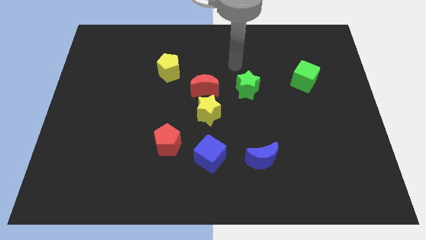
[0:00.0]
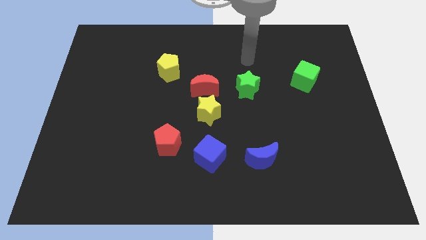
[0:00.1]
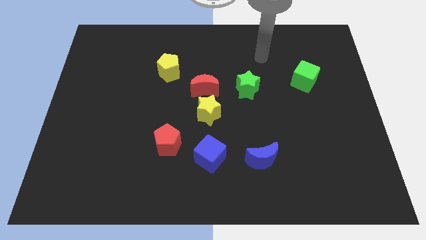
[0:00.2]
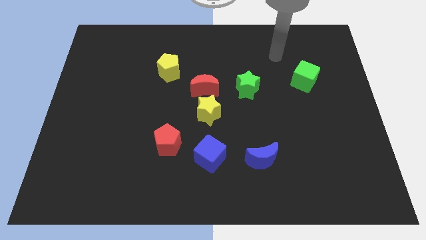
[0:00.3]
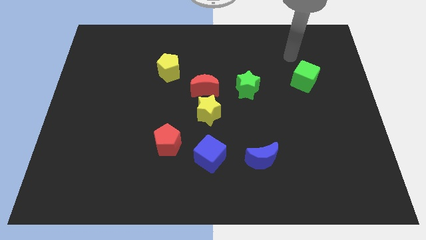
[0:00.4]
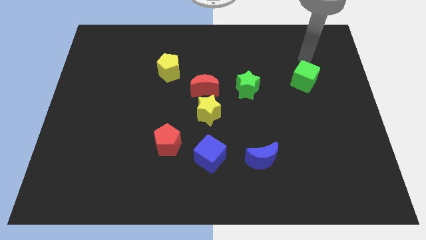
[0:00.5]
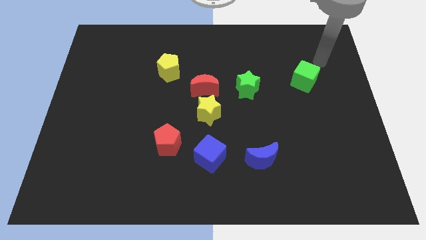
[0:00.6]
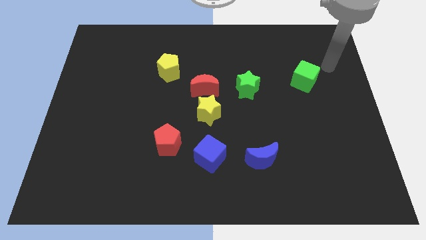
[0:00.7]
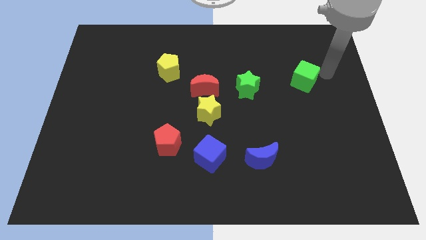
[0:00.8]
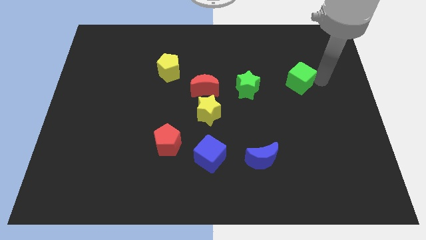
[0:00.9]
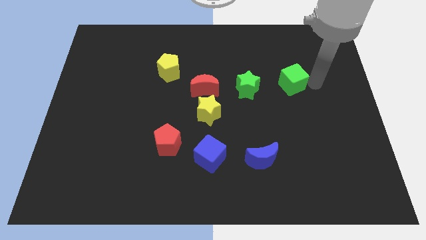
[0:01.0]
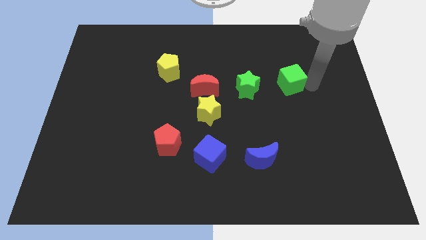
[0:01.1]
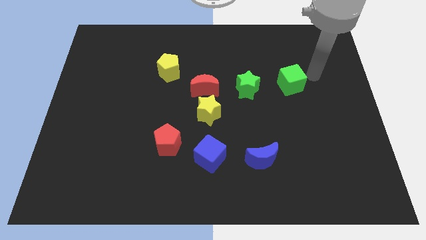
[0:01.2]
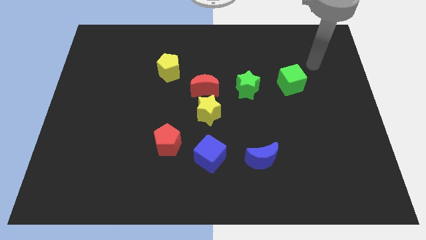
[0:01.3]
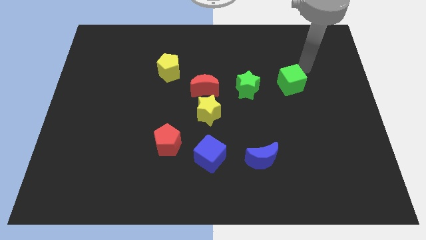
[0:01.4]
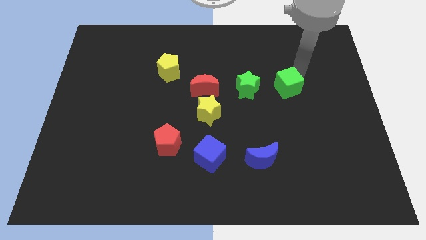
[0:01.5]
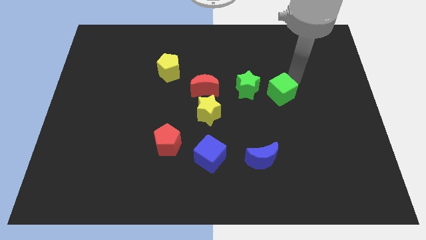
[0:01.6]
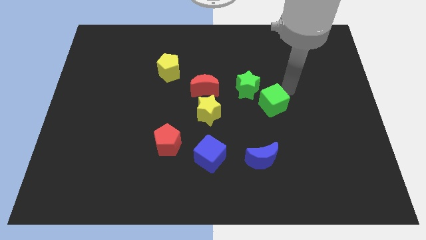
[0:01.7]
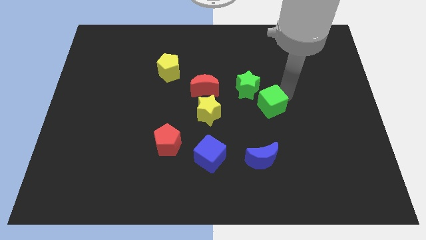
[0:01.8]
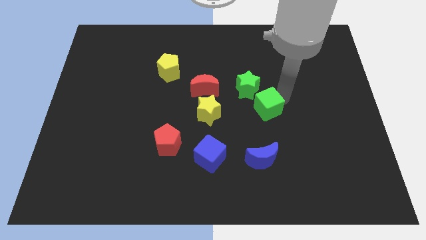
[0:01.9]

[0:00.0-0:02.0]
move the green cube to the bottom right of the green star

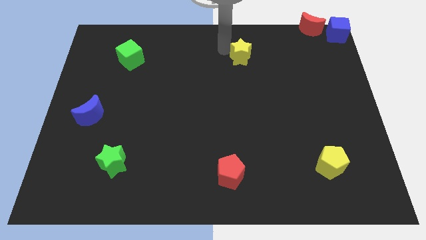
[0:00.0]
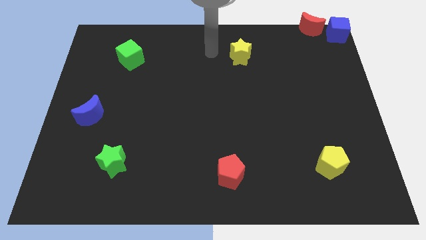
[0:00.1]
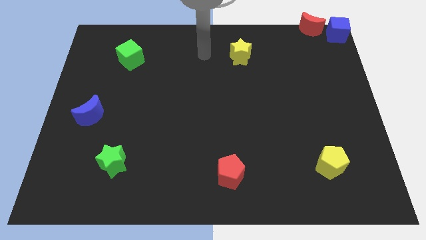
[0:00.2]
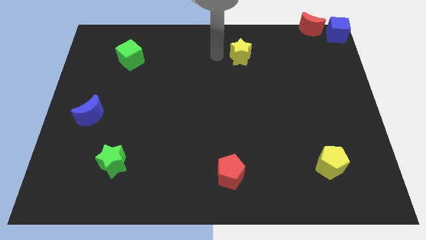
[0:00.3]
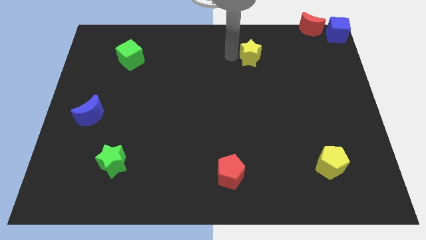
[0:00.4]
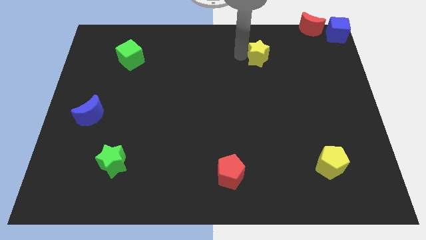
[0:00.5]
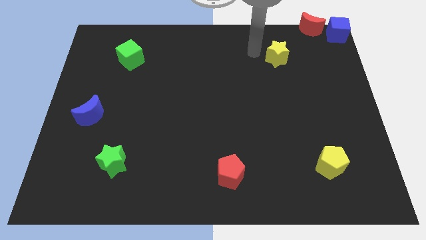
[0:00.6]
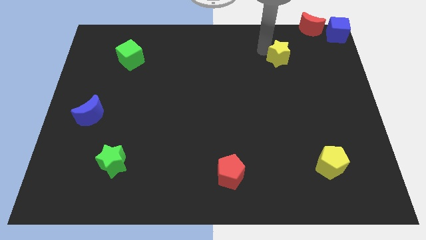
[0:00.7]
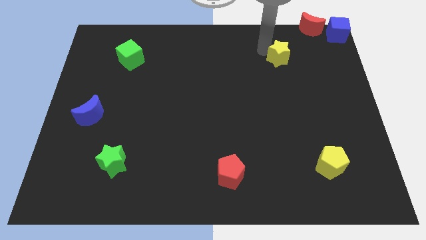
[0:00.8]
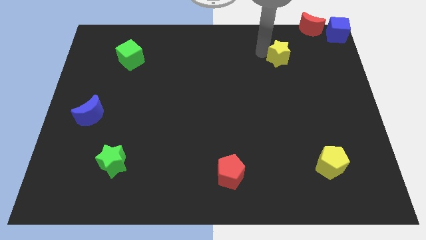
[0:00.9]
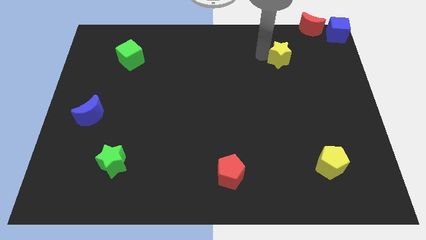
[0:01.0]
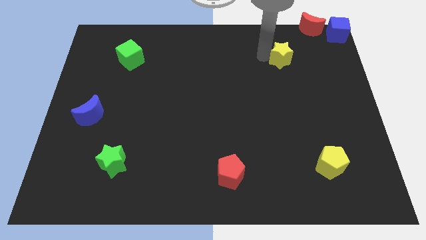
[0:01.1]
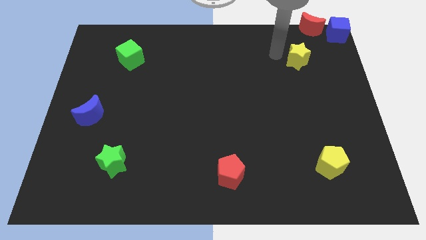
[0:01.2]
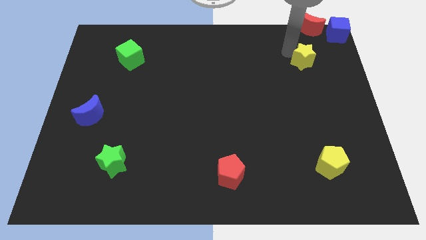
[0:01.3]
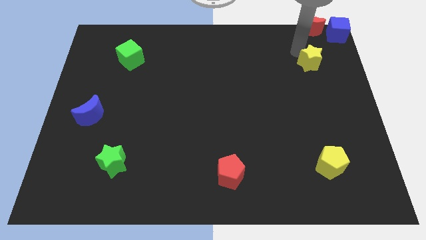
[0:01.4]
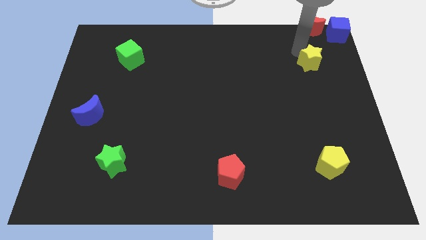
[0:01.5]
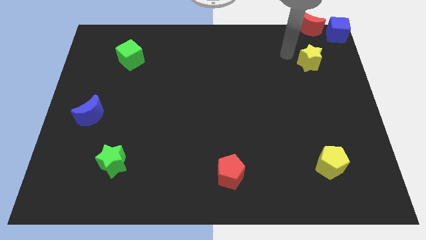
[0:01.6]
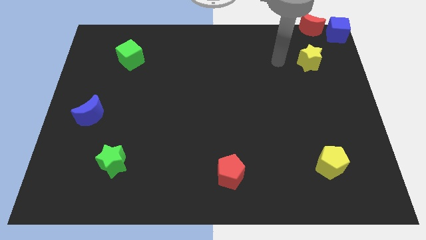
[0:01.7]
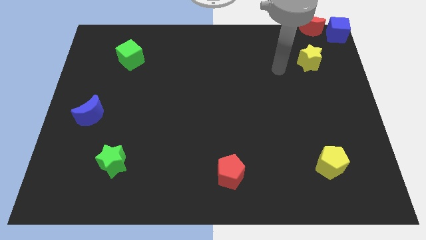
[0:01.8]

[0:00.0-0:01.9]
move the yellow star below the red moon

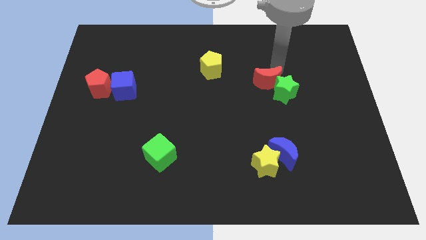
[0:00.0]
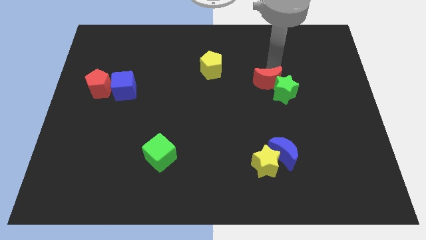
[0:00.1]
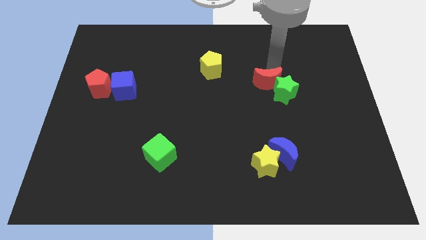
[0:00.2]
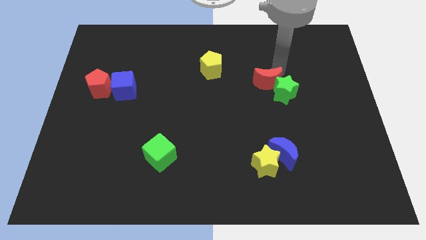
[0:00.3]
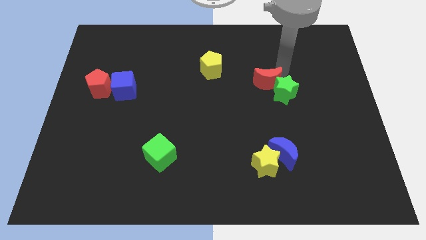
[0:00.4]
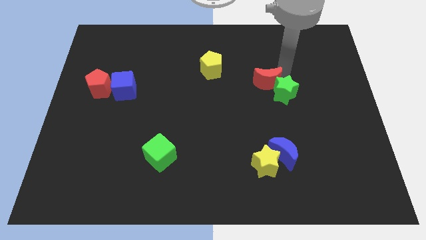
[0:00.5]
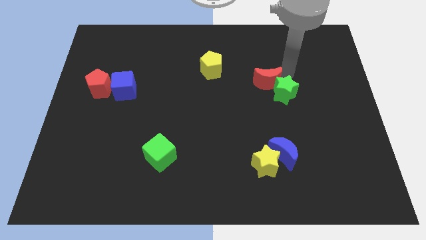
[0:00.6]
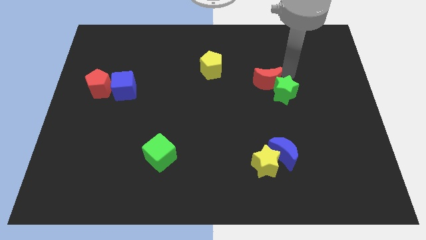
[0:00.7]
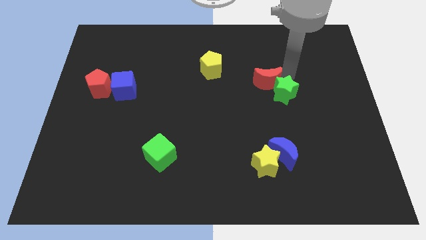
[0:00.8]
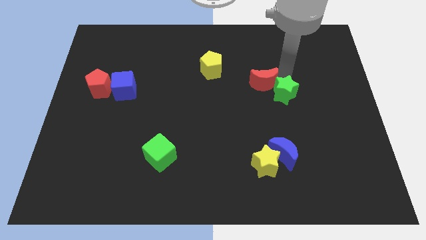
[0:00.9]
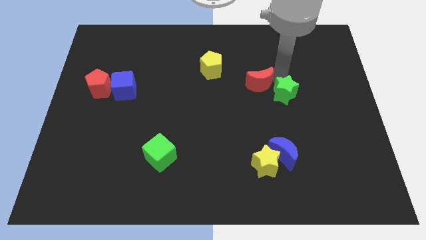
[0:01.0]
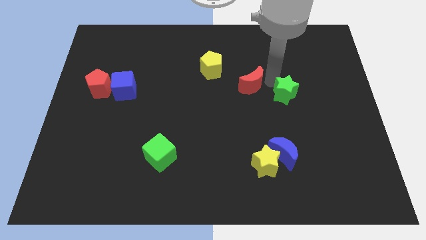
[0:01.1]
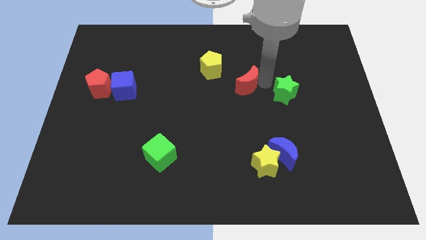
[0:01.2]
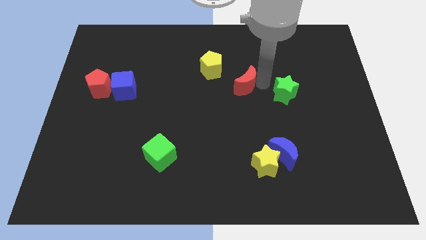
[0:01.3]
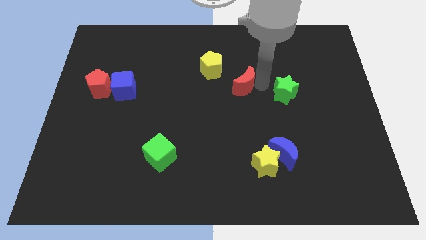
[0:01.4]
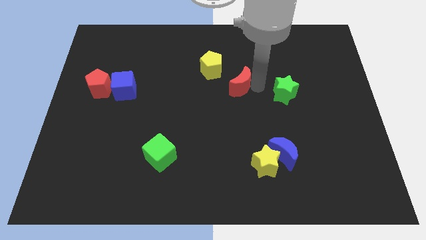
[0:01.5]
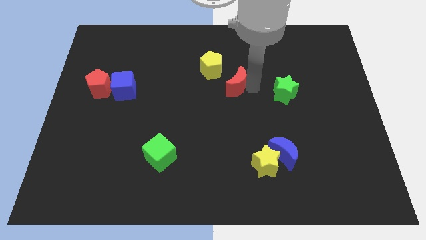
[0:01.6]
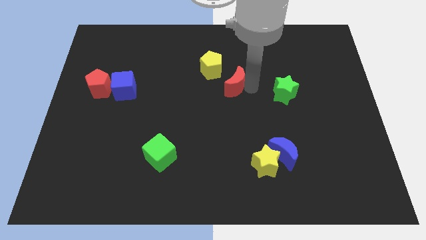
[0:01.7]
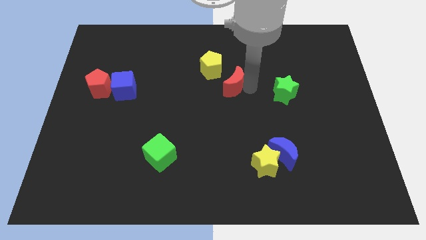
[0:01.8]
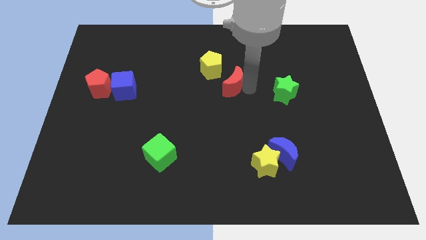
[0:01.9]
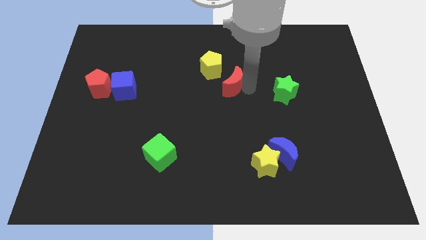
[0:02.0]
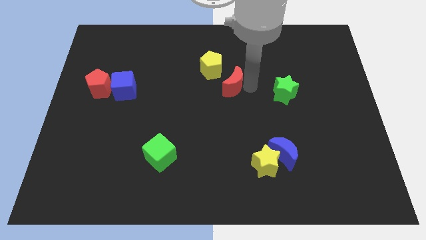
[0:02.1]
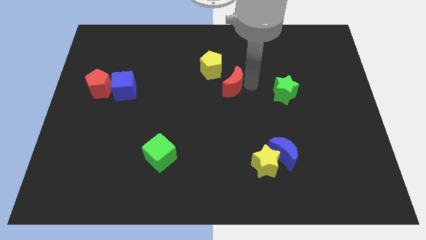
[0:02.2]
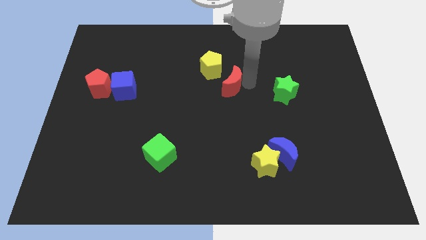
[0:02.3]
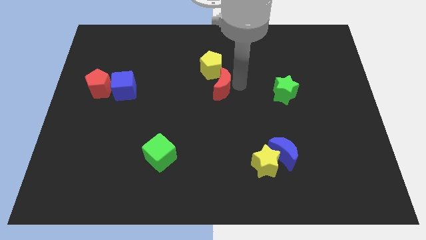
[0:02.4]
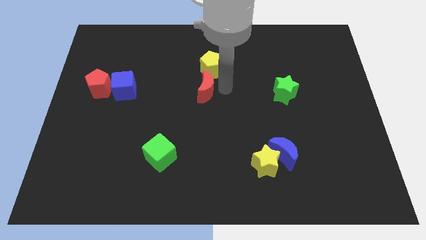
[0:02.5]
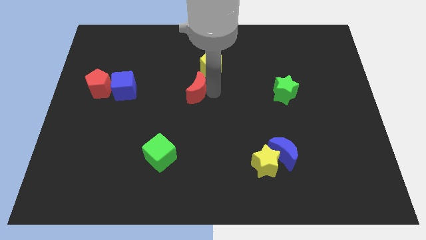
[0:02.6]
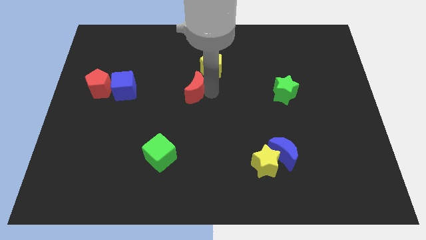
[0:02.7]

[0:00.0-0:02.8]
place red moon below yellow pentagon

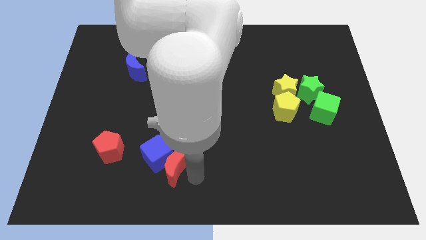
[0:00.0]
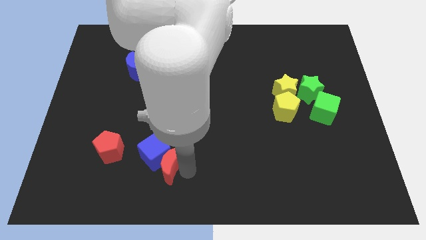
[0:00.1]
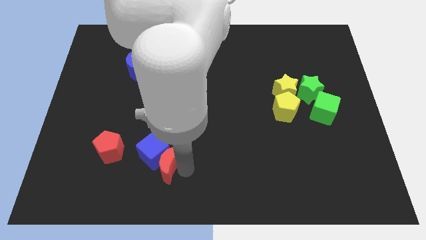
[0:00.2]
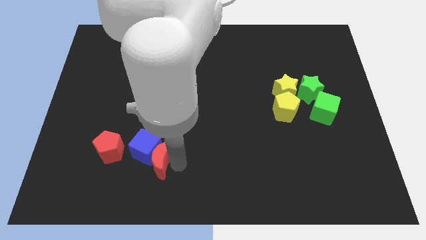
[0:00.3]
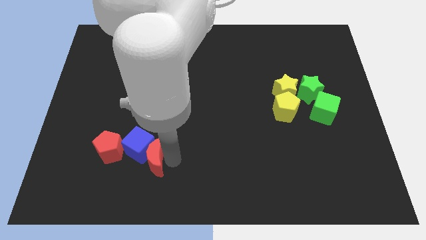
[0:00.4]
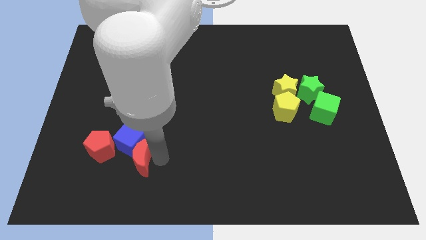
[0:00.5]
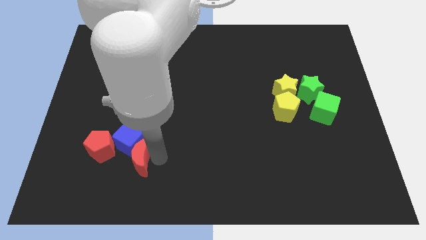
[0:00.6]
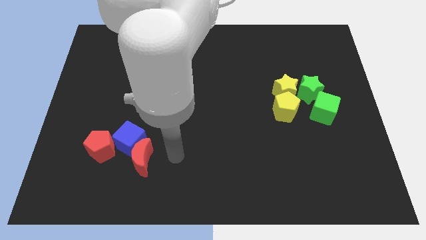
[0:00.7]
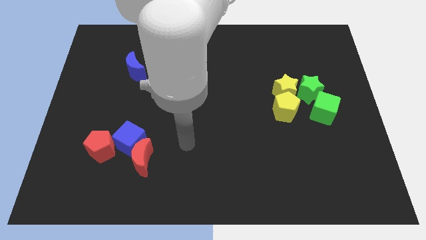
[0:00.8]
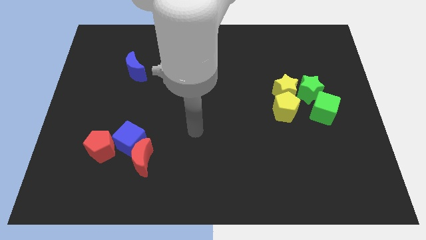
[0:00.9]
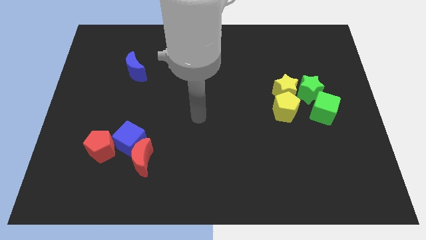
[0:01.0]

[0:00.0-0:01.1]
slide red moon and blue cube into the red pentagon

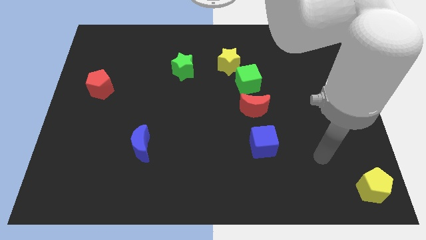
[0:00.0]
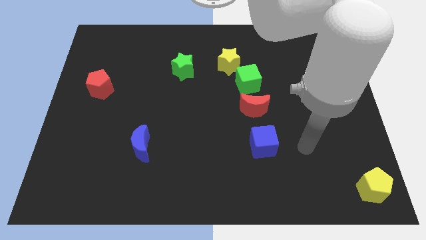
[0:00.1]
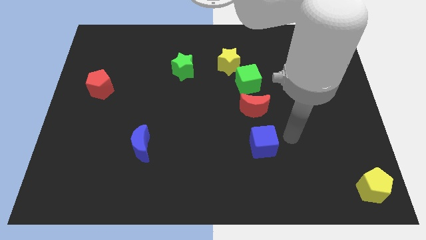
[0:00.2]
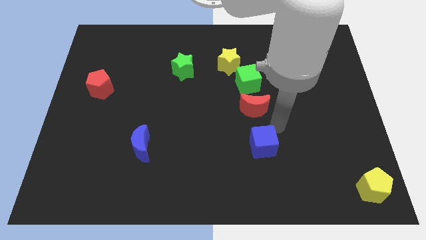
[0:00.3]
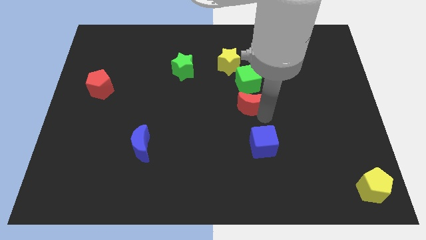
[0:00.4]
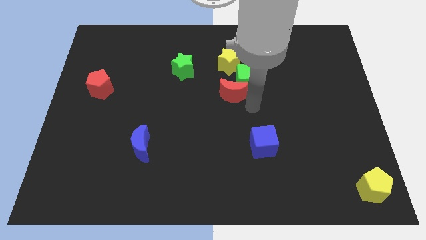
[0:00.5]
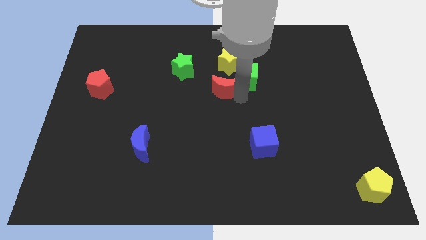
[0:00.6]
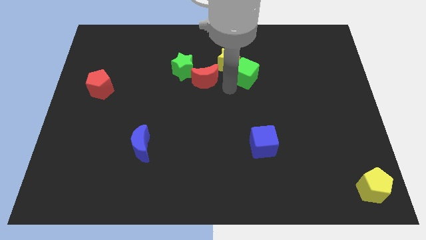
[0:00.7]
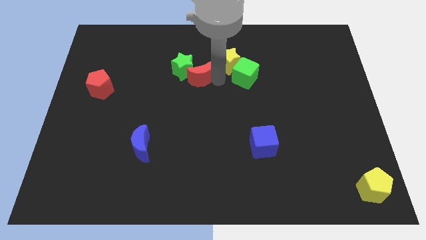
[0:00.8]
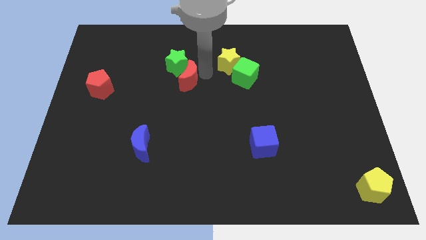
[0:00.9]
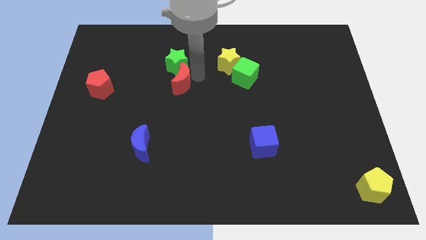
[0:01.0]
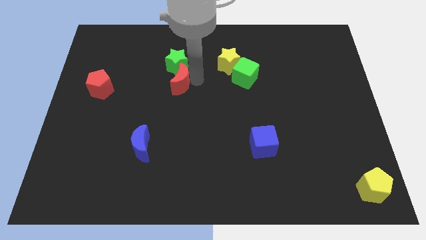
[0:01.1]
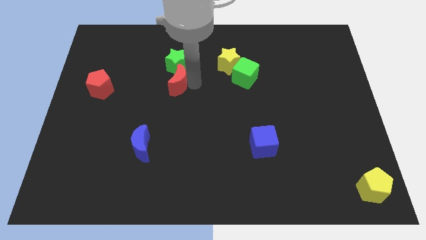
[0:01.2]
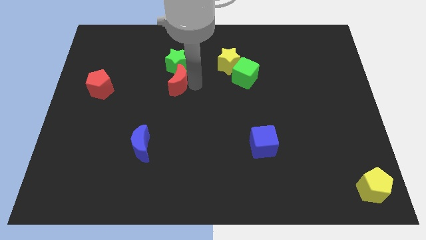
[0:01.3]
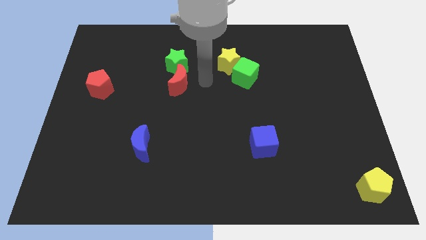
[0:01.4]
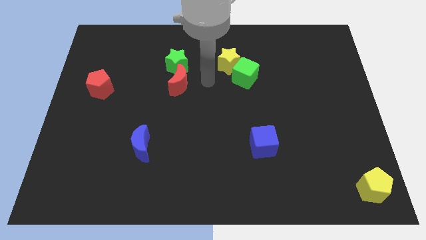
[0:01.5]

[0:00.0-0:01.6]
push the red crescent below the green star
